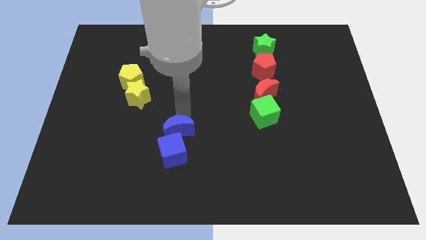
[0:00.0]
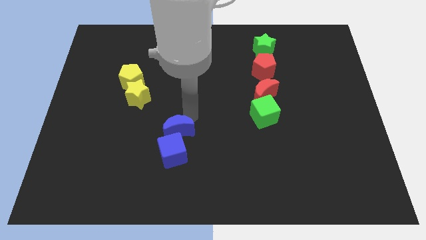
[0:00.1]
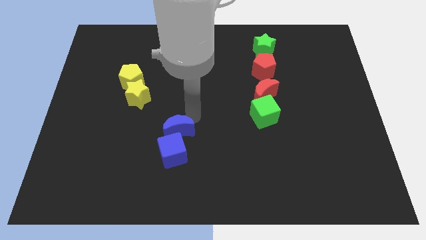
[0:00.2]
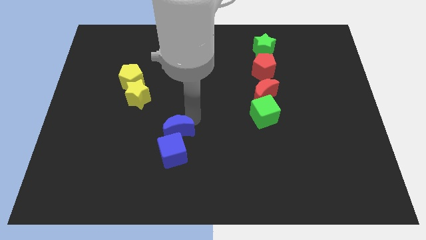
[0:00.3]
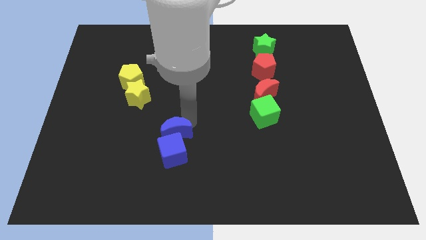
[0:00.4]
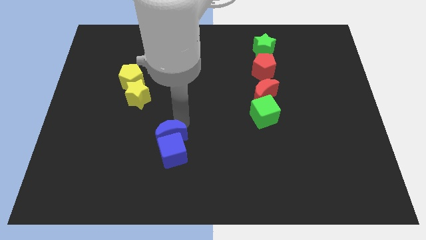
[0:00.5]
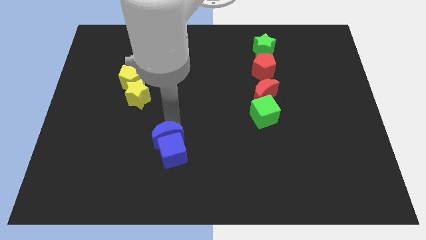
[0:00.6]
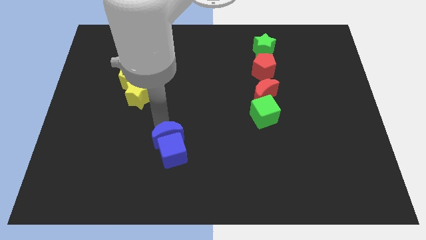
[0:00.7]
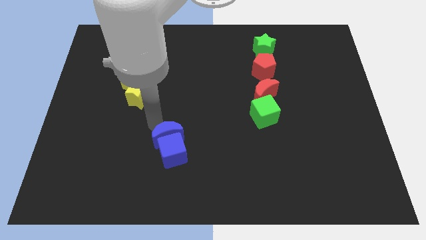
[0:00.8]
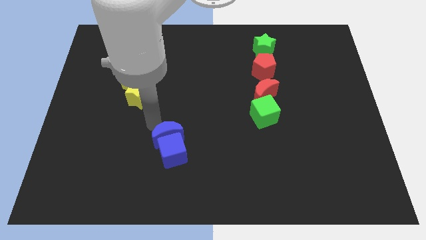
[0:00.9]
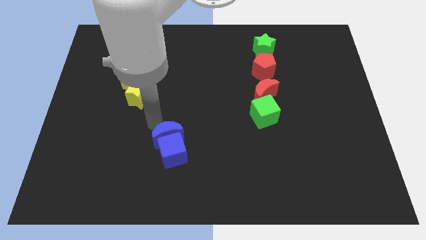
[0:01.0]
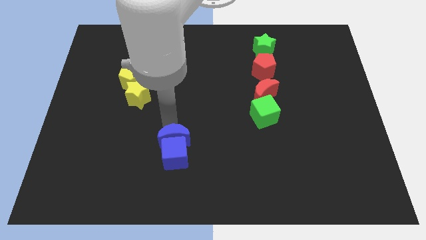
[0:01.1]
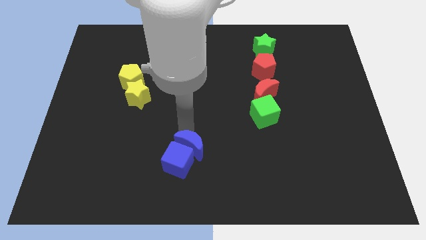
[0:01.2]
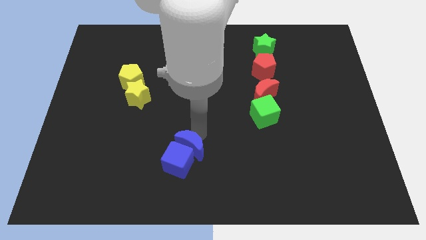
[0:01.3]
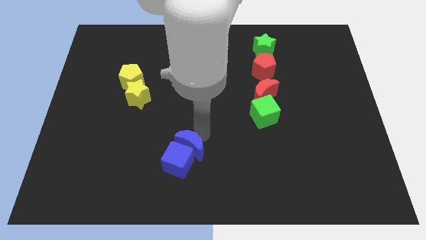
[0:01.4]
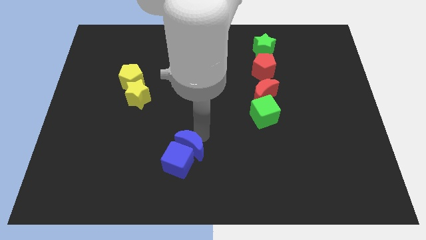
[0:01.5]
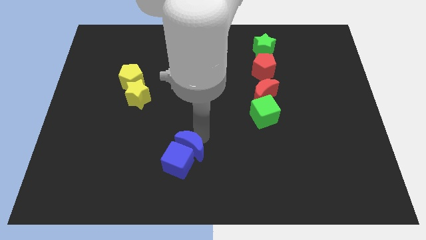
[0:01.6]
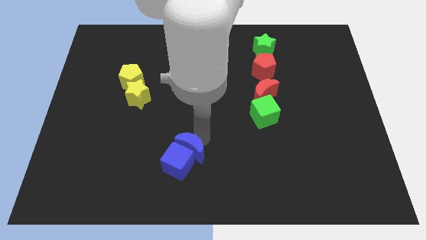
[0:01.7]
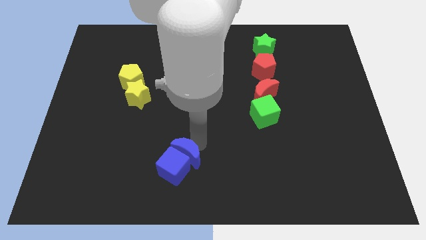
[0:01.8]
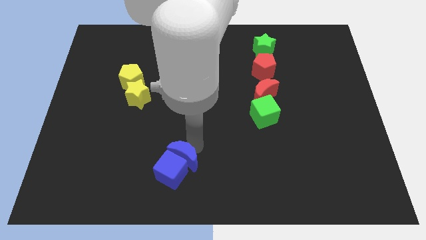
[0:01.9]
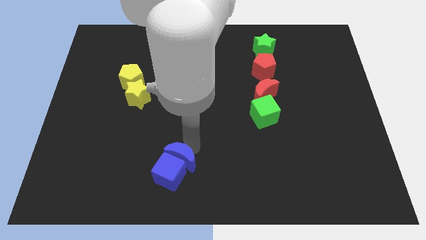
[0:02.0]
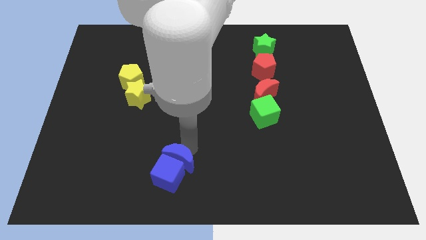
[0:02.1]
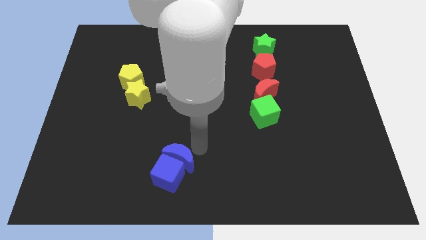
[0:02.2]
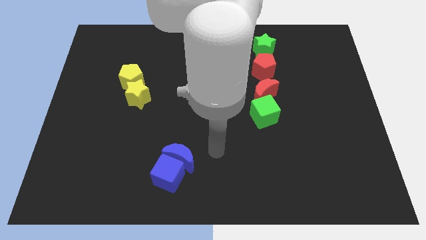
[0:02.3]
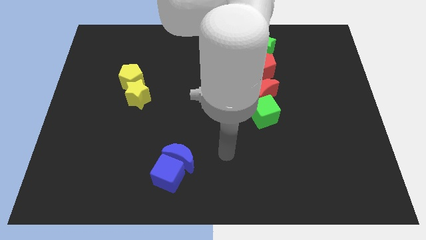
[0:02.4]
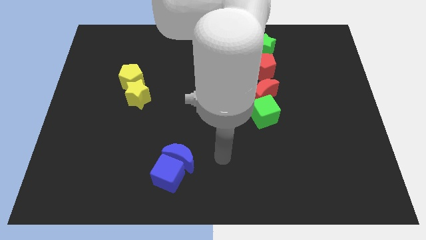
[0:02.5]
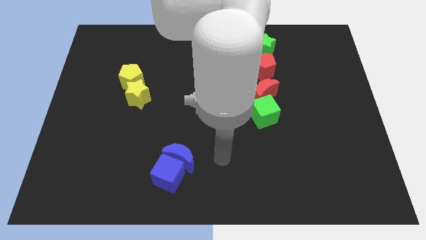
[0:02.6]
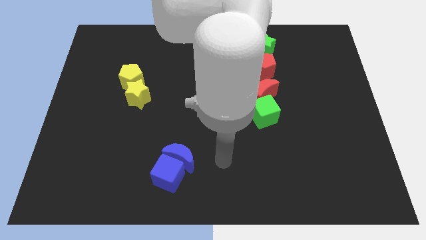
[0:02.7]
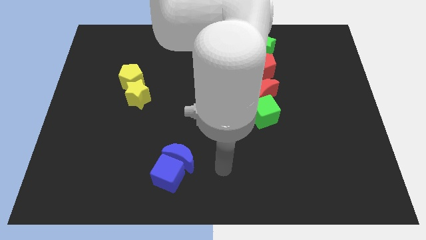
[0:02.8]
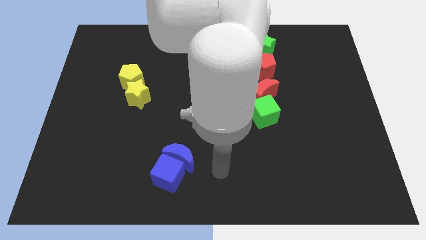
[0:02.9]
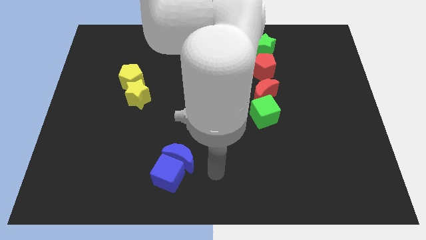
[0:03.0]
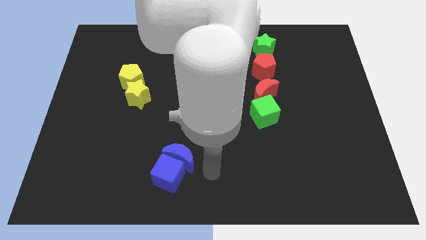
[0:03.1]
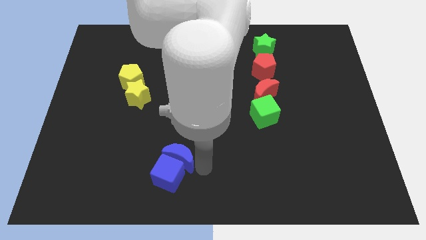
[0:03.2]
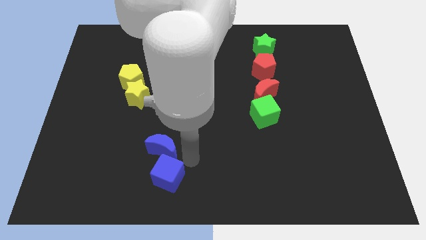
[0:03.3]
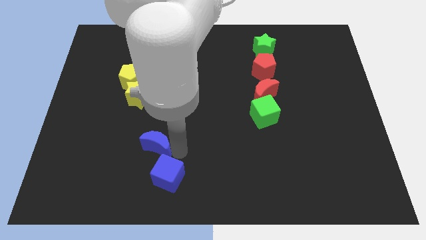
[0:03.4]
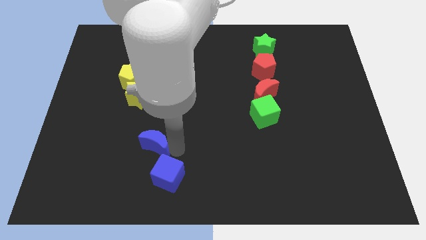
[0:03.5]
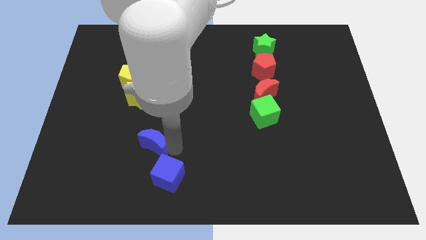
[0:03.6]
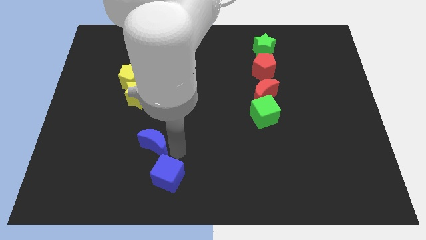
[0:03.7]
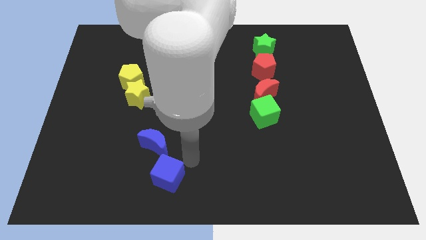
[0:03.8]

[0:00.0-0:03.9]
push the blue blocks to the bottom side of yellow blocks

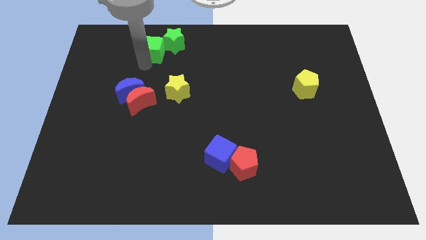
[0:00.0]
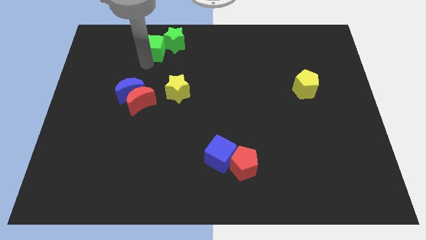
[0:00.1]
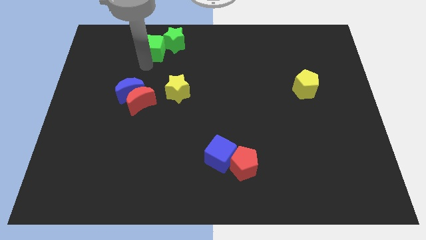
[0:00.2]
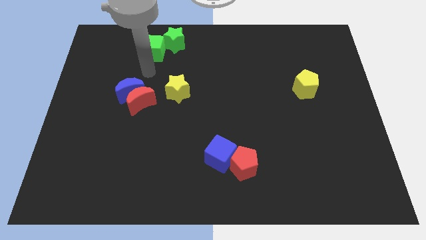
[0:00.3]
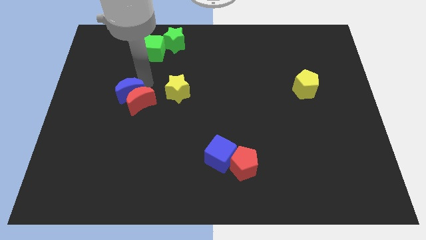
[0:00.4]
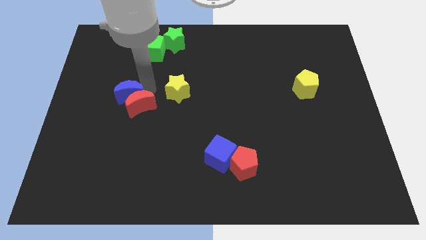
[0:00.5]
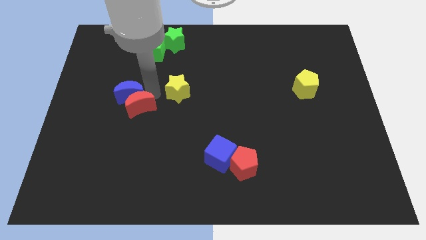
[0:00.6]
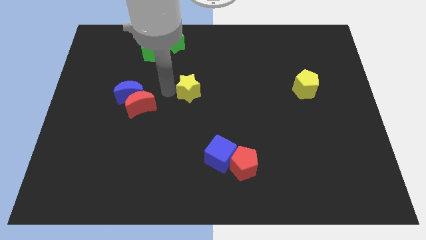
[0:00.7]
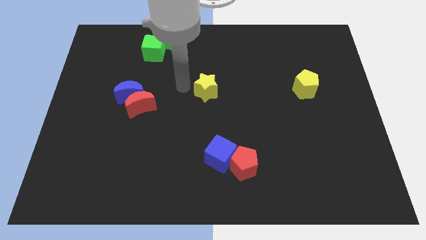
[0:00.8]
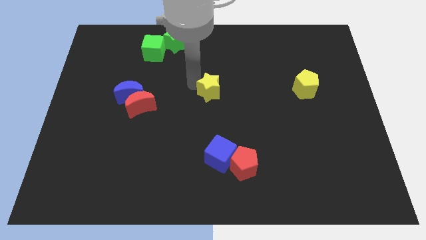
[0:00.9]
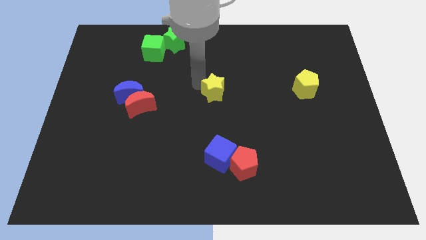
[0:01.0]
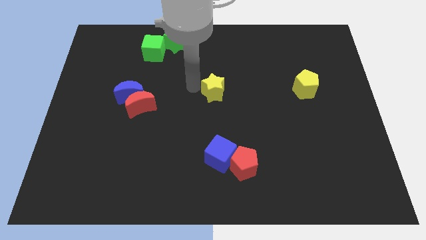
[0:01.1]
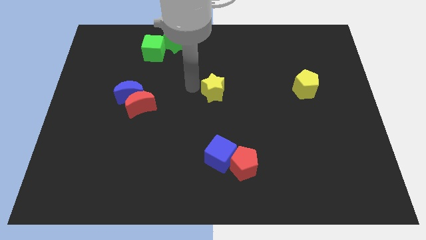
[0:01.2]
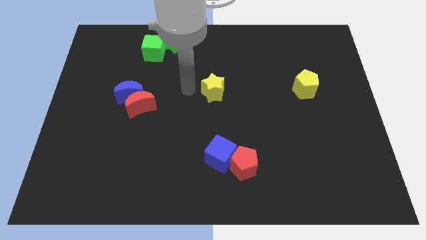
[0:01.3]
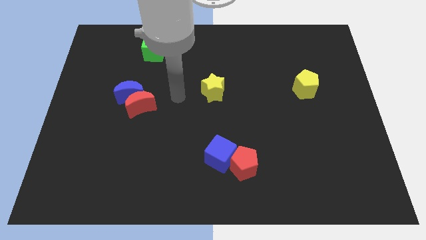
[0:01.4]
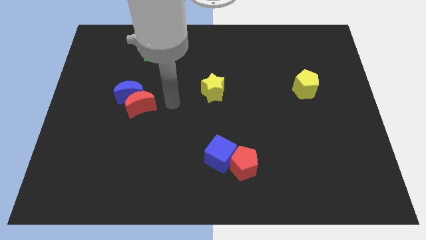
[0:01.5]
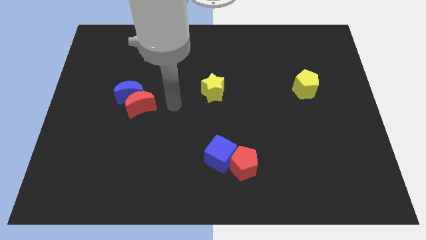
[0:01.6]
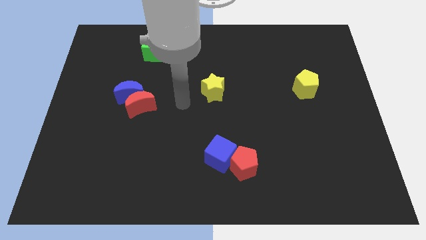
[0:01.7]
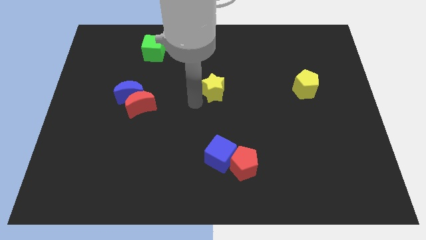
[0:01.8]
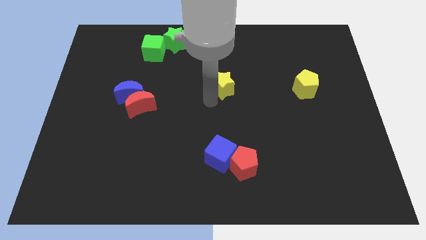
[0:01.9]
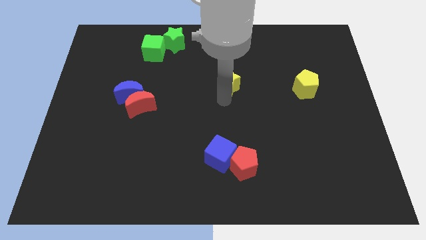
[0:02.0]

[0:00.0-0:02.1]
move the yellow star to the centre of the board

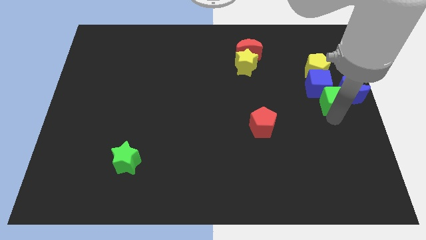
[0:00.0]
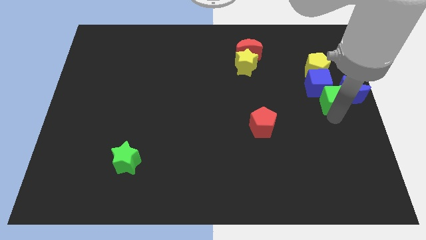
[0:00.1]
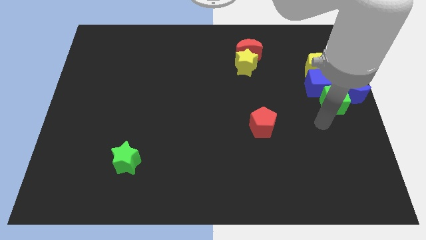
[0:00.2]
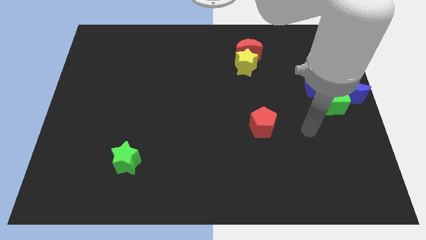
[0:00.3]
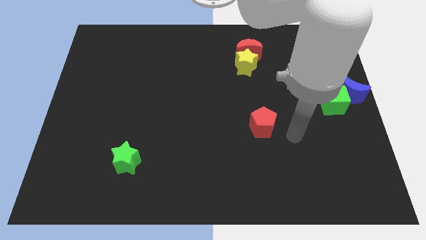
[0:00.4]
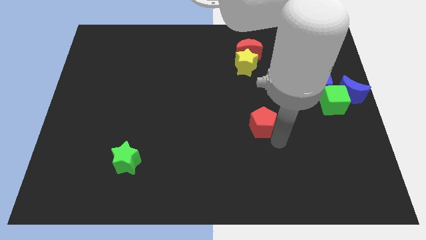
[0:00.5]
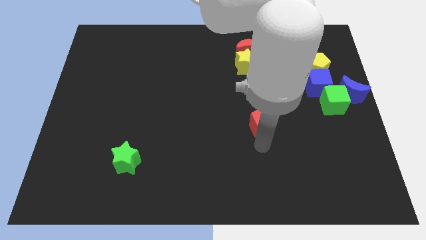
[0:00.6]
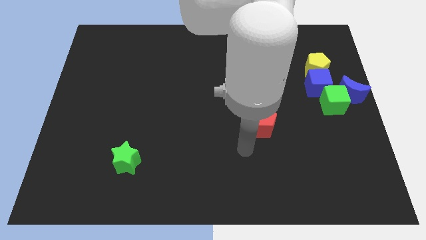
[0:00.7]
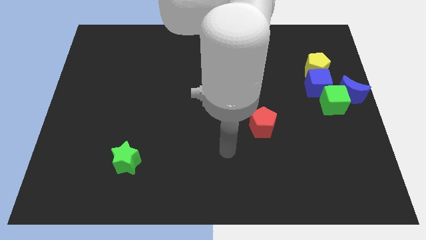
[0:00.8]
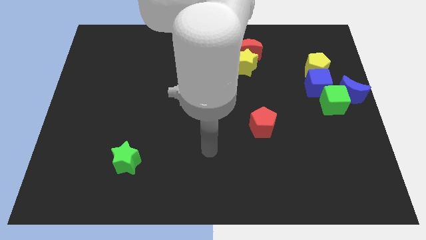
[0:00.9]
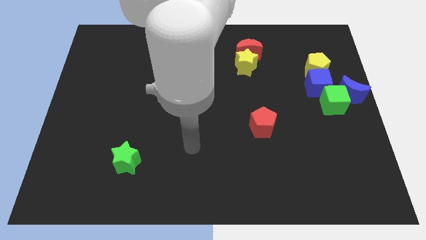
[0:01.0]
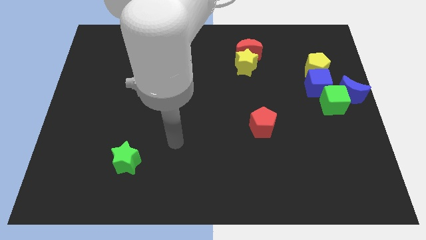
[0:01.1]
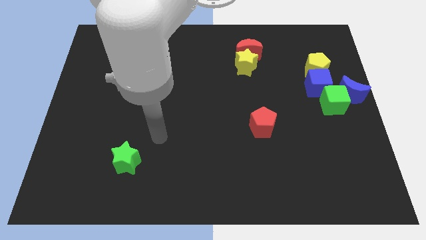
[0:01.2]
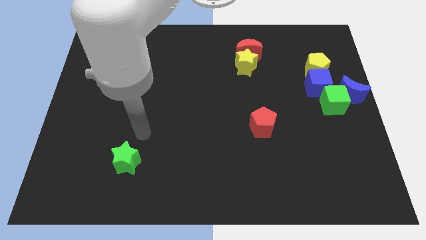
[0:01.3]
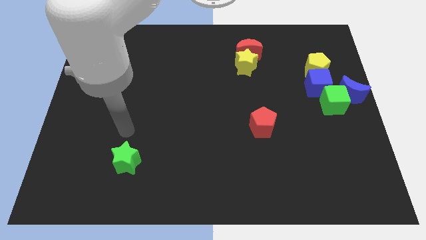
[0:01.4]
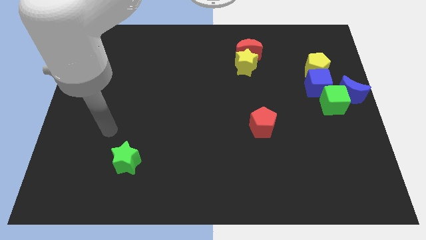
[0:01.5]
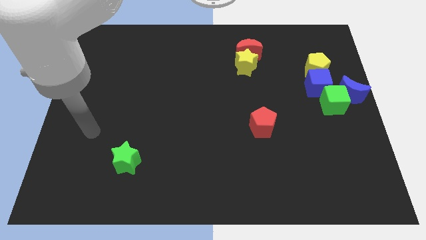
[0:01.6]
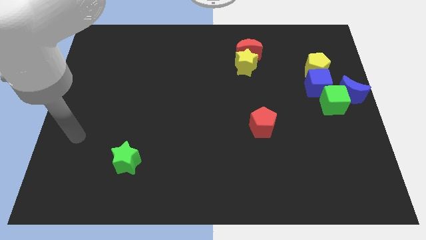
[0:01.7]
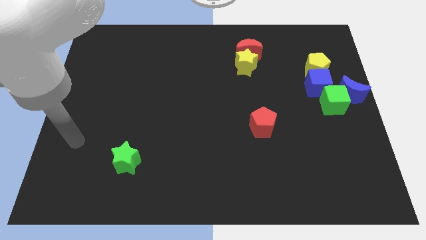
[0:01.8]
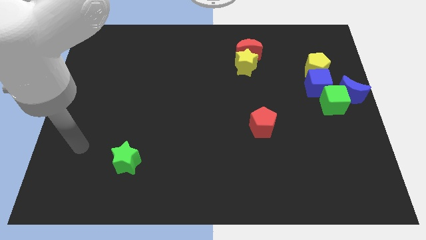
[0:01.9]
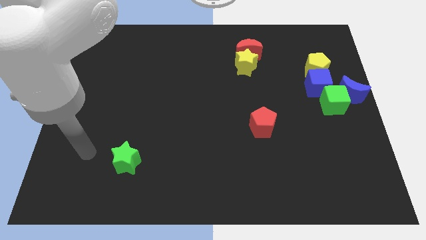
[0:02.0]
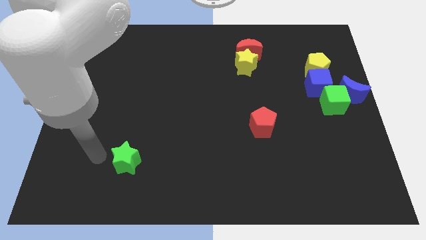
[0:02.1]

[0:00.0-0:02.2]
move your arm away from the green cube

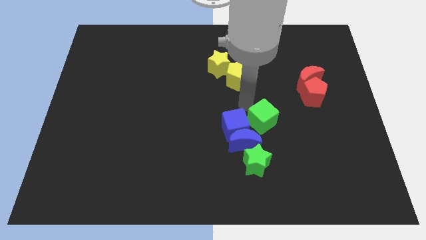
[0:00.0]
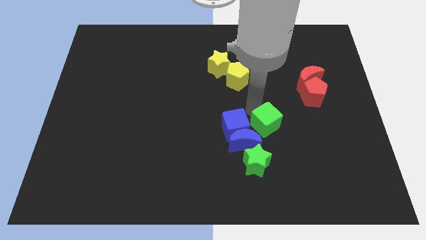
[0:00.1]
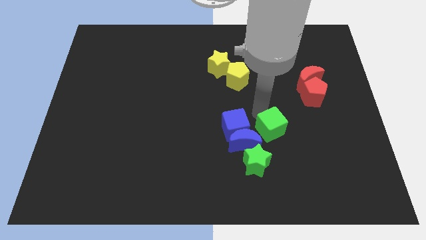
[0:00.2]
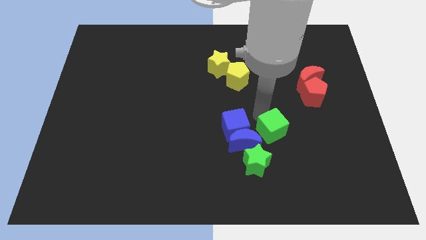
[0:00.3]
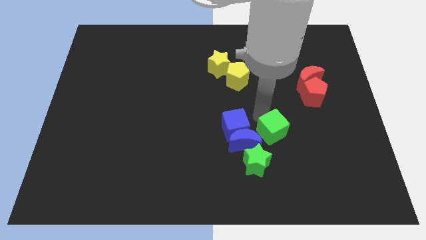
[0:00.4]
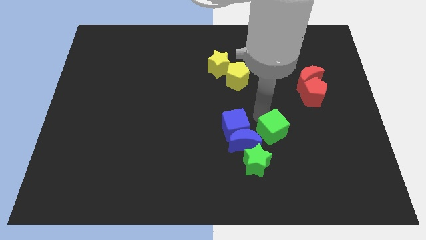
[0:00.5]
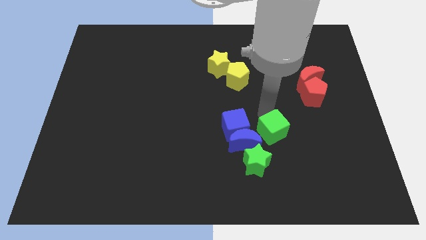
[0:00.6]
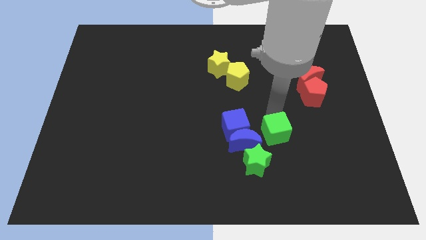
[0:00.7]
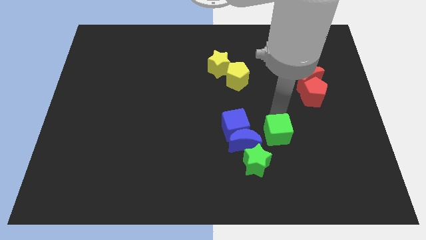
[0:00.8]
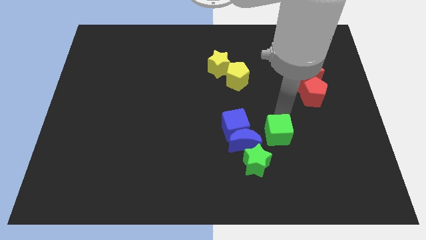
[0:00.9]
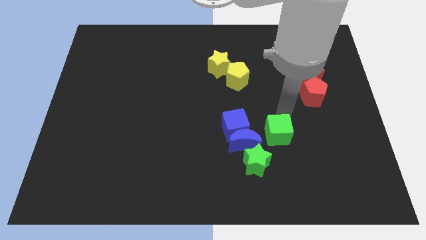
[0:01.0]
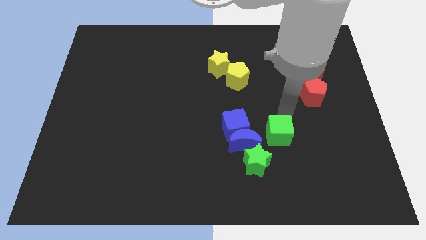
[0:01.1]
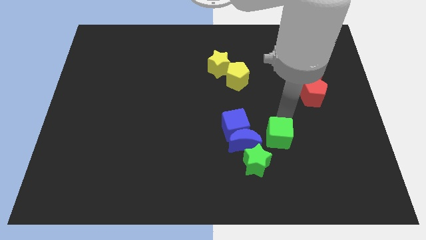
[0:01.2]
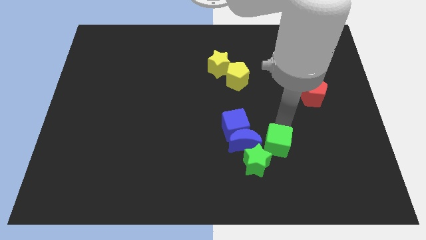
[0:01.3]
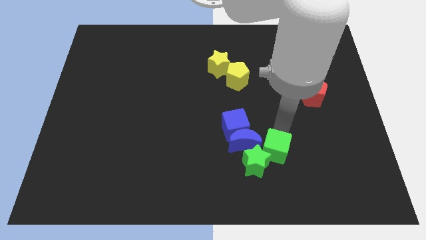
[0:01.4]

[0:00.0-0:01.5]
push the green cube to the right of the blue crescent
